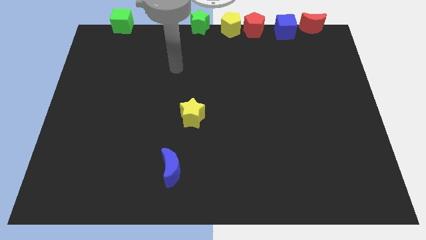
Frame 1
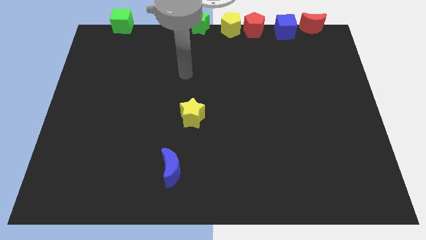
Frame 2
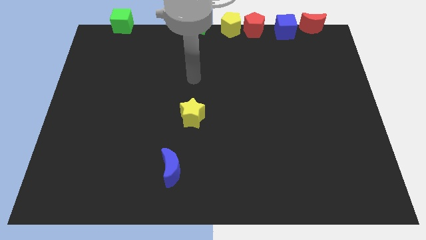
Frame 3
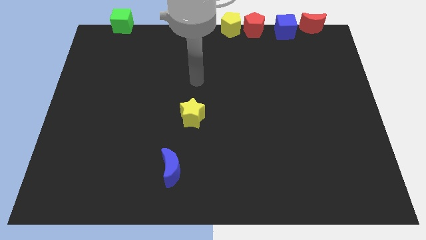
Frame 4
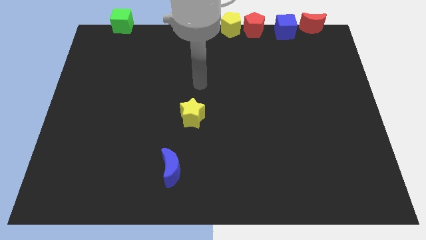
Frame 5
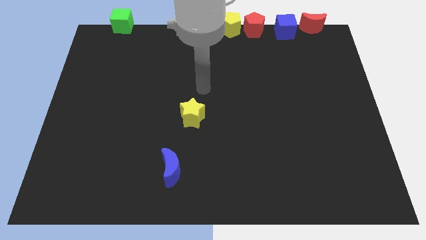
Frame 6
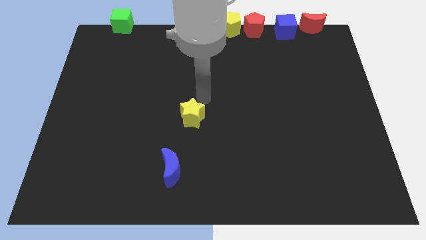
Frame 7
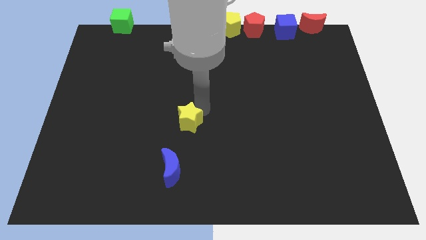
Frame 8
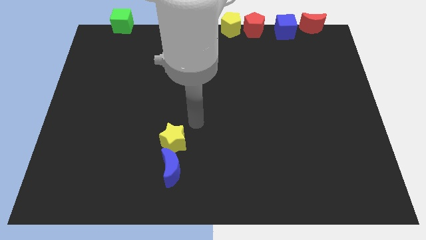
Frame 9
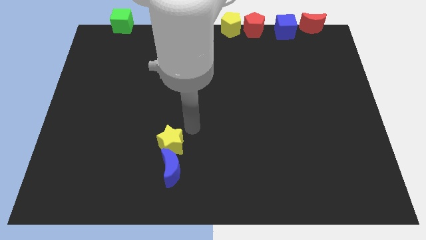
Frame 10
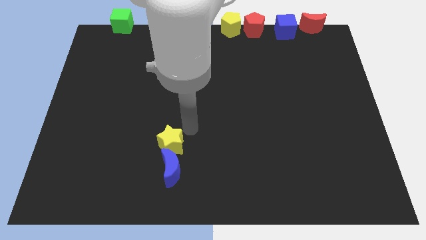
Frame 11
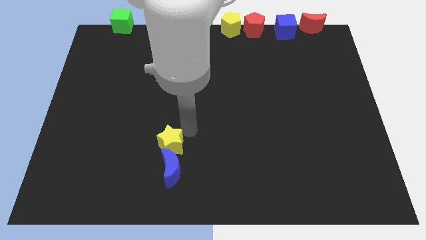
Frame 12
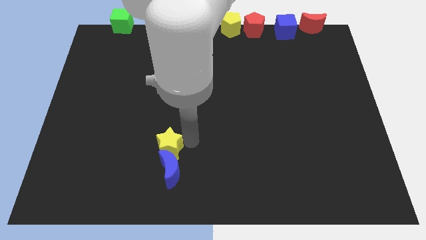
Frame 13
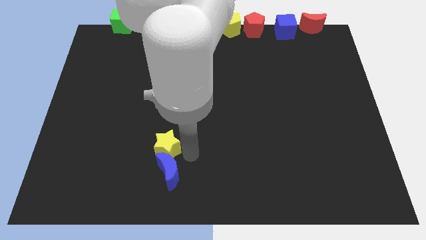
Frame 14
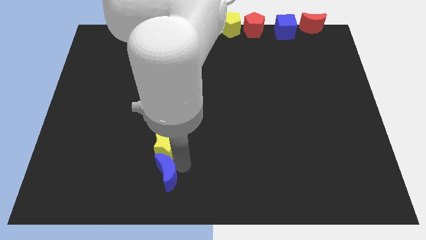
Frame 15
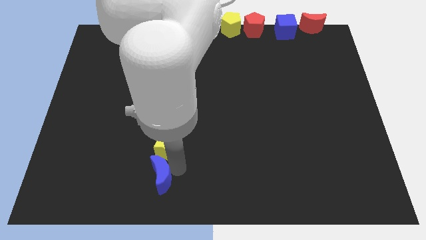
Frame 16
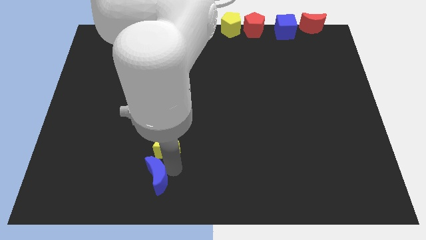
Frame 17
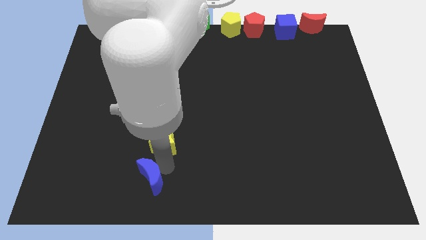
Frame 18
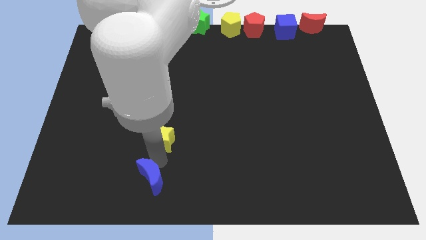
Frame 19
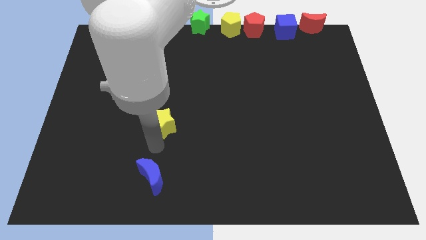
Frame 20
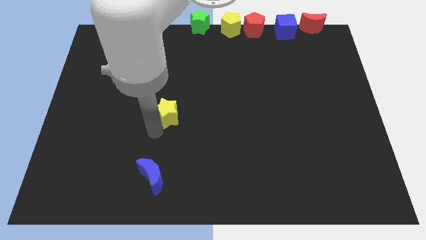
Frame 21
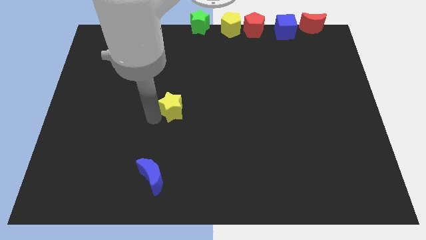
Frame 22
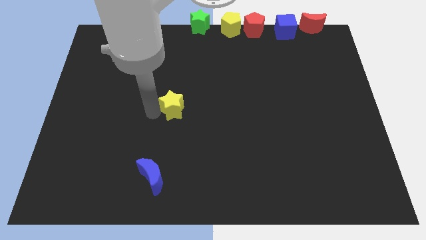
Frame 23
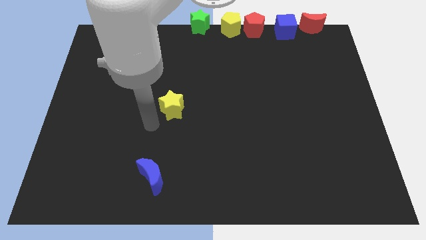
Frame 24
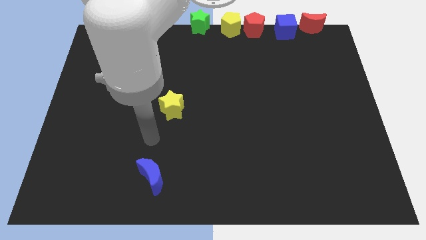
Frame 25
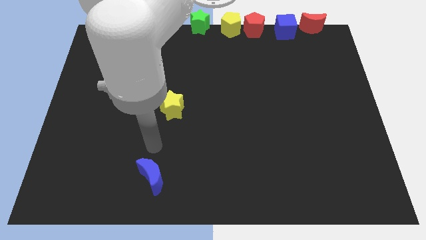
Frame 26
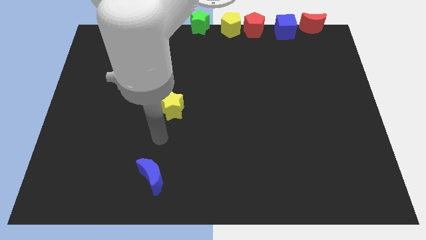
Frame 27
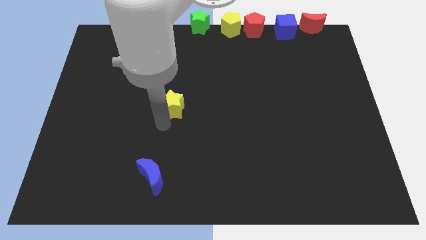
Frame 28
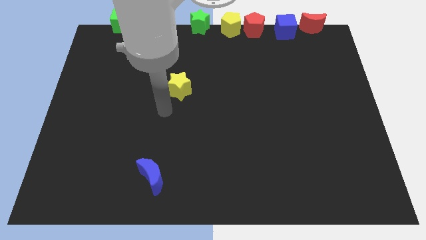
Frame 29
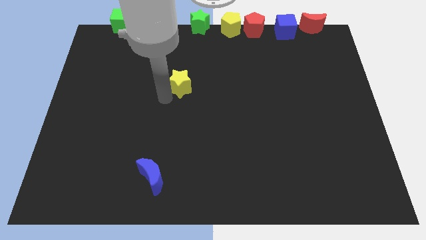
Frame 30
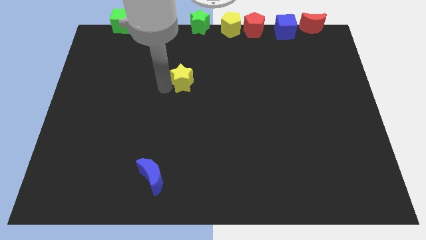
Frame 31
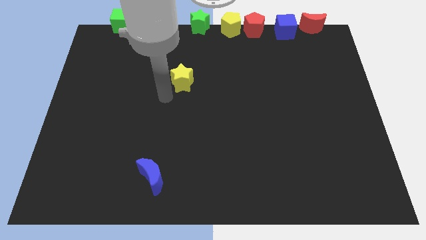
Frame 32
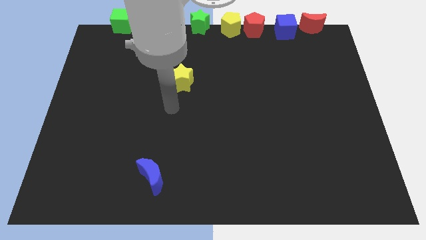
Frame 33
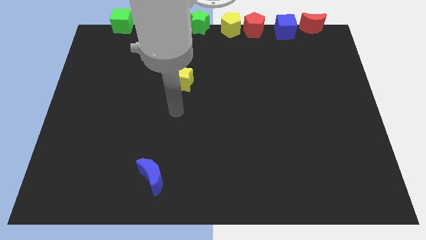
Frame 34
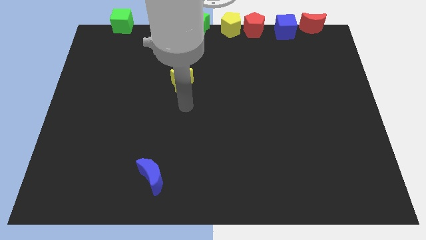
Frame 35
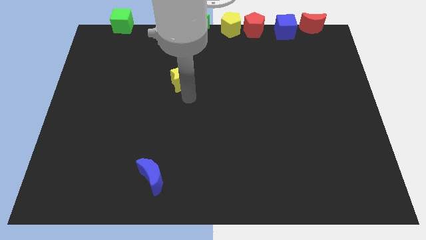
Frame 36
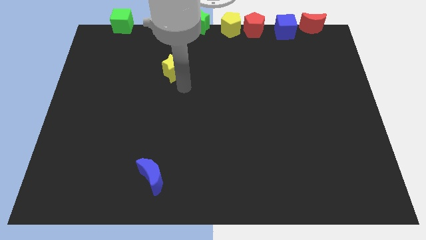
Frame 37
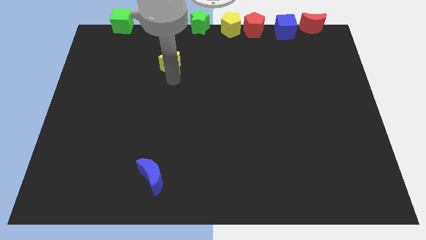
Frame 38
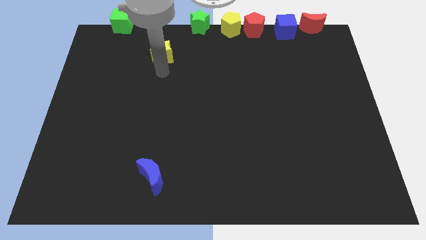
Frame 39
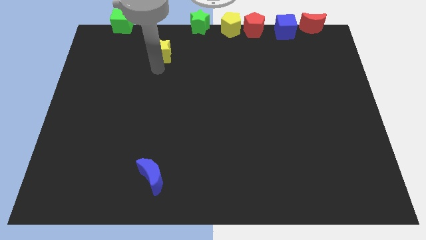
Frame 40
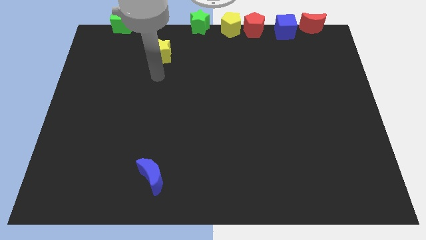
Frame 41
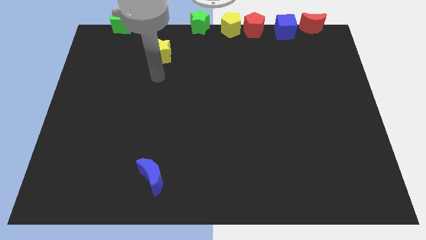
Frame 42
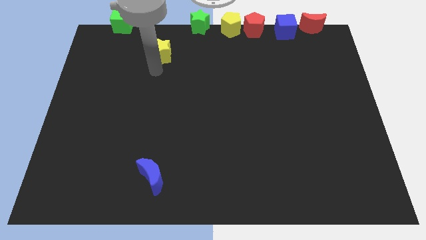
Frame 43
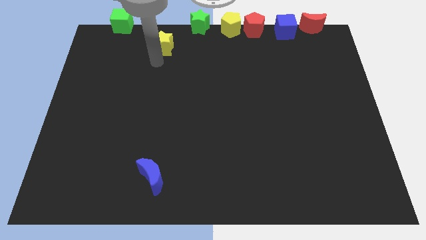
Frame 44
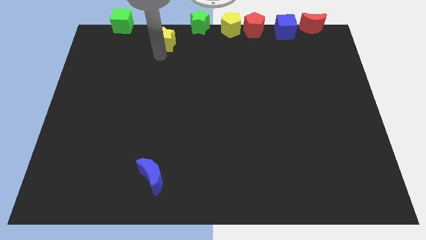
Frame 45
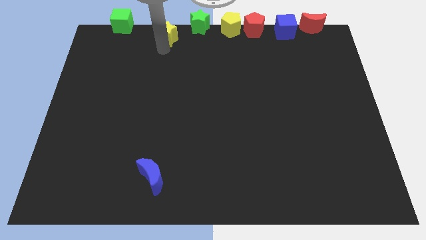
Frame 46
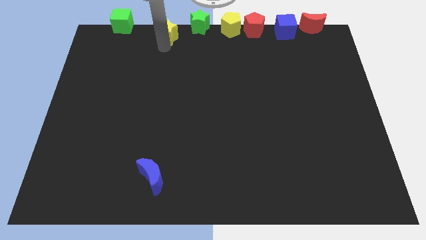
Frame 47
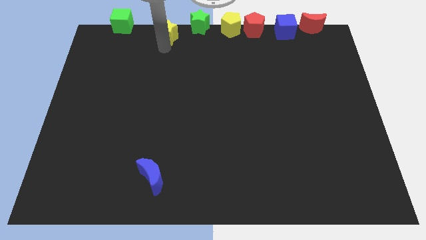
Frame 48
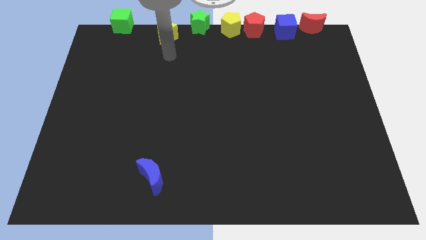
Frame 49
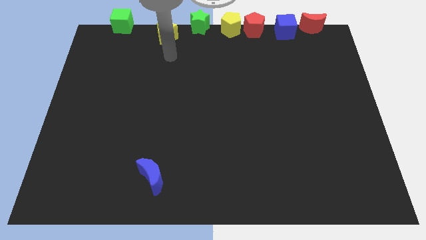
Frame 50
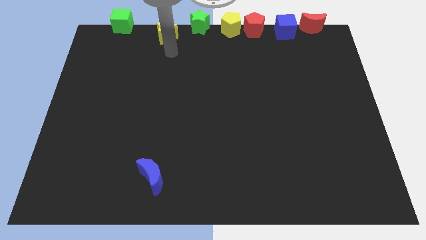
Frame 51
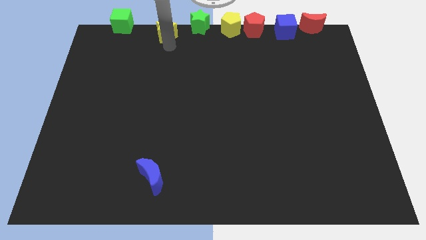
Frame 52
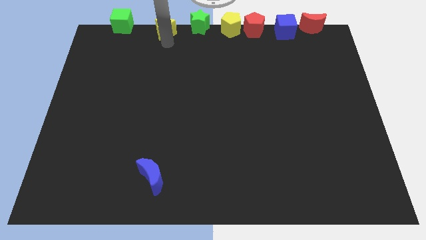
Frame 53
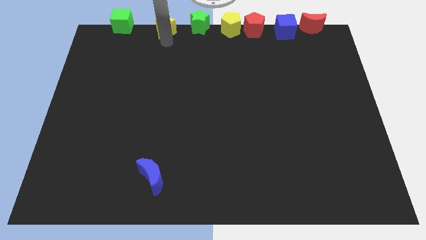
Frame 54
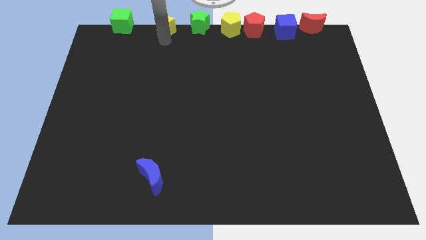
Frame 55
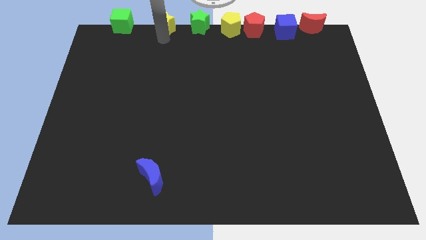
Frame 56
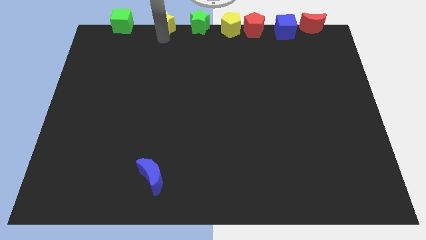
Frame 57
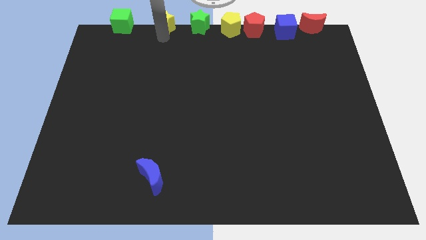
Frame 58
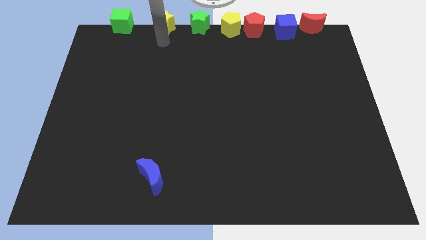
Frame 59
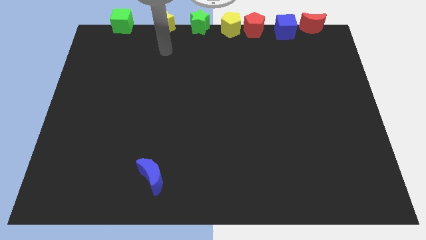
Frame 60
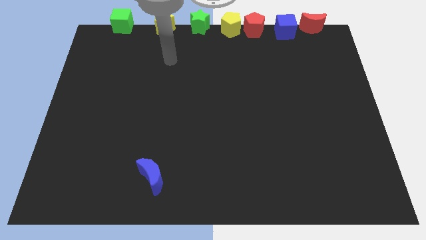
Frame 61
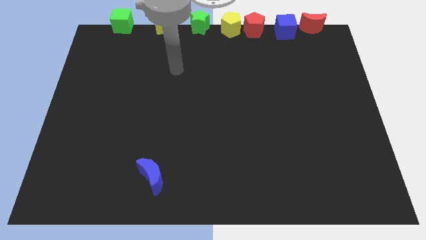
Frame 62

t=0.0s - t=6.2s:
place the yellow star in between the green cube and green star

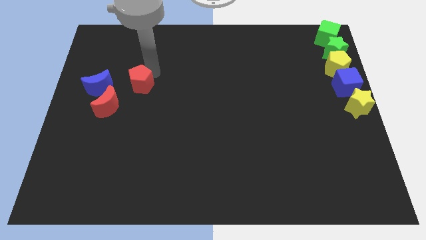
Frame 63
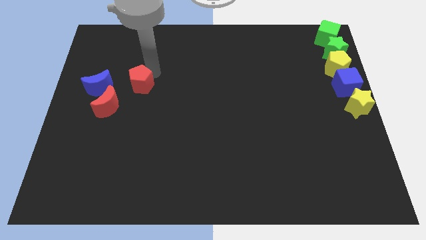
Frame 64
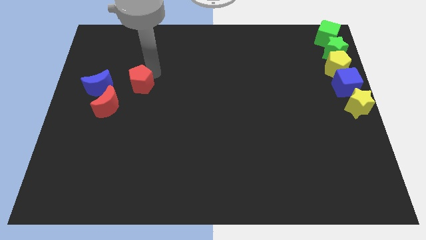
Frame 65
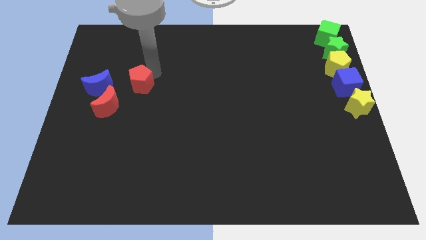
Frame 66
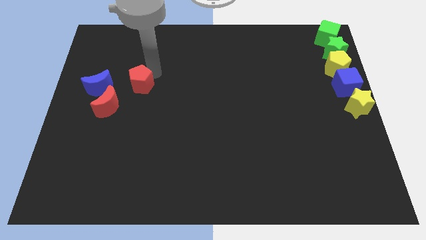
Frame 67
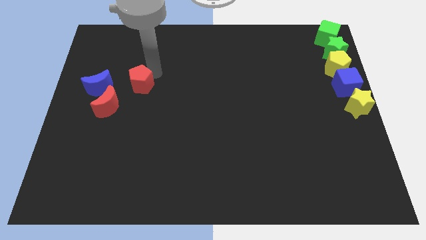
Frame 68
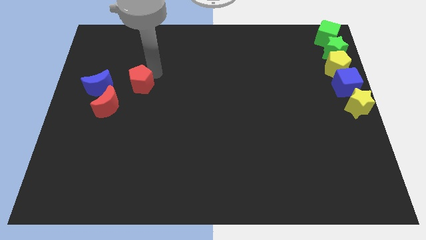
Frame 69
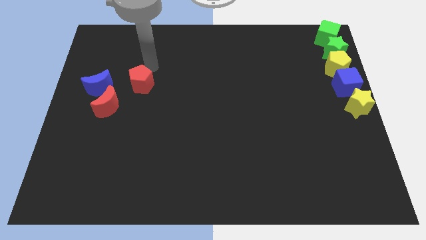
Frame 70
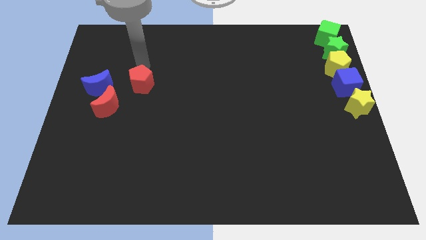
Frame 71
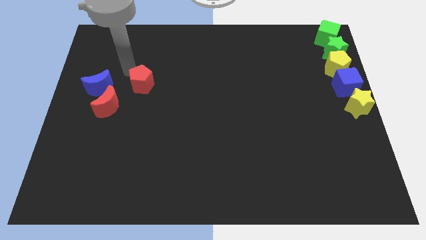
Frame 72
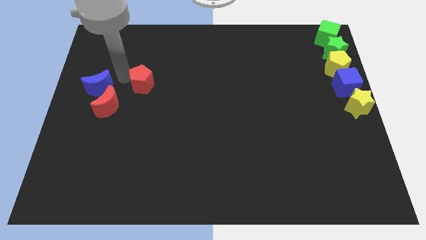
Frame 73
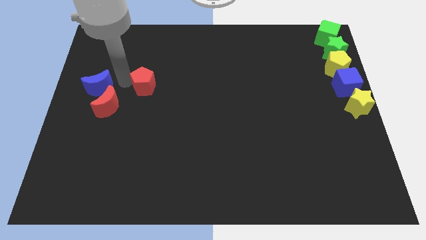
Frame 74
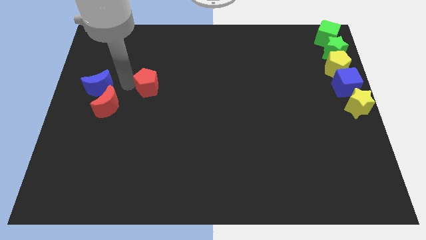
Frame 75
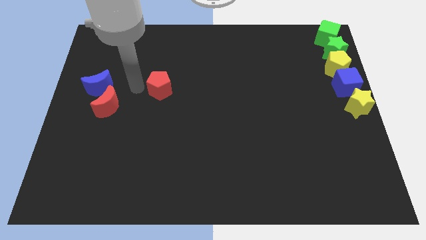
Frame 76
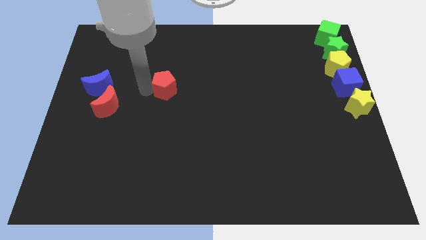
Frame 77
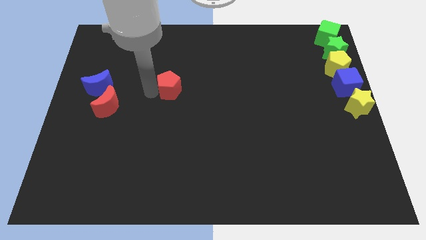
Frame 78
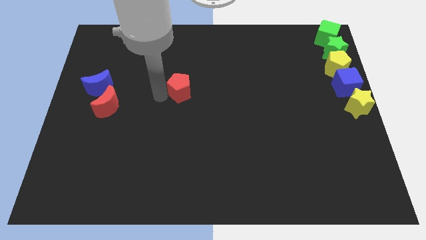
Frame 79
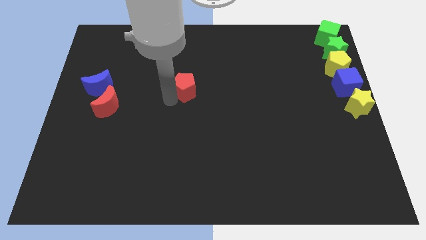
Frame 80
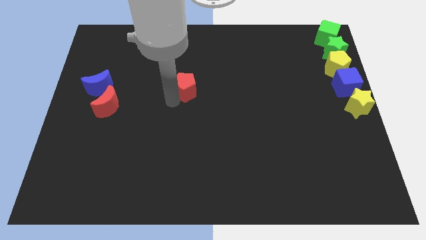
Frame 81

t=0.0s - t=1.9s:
push the red pentagon towards the center of the board

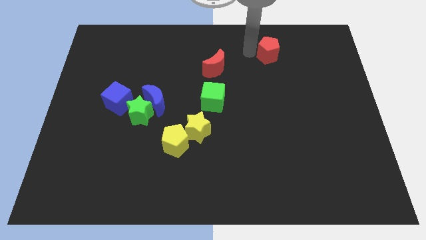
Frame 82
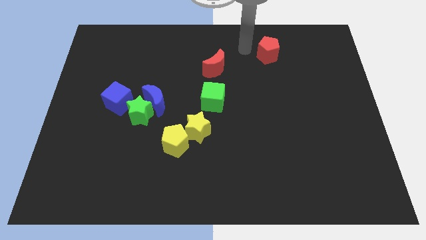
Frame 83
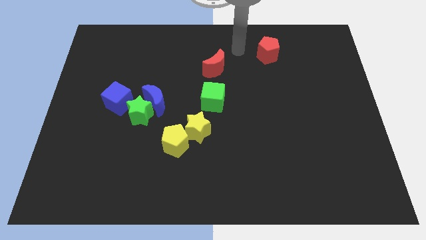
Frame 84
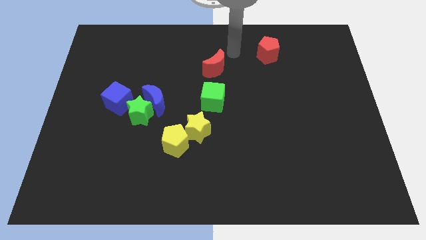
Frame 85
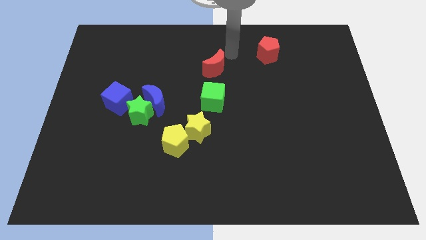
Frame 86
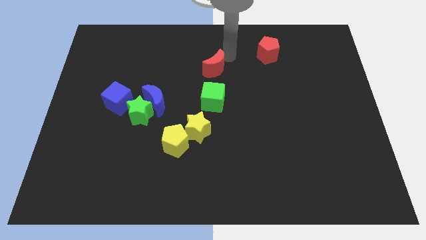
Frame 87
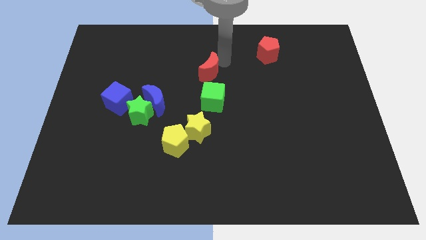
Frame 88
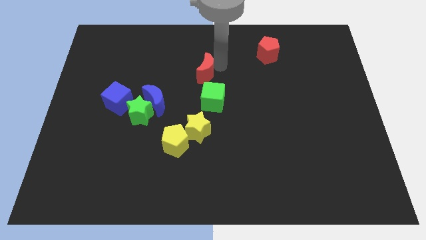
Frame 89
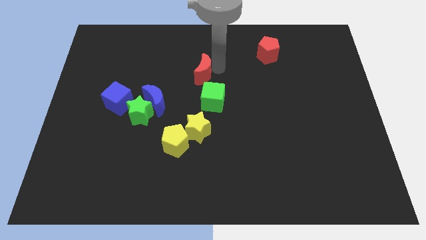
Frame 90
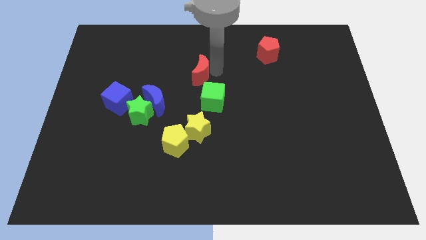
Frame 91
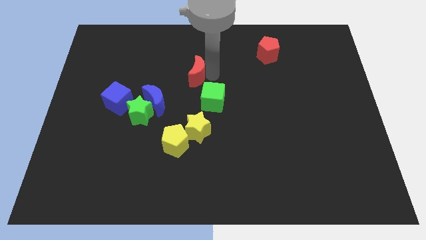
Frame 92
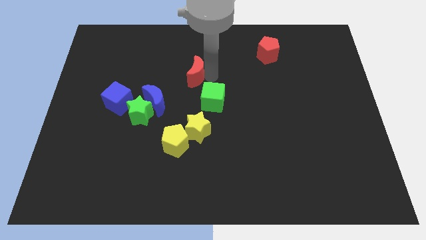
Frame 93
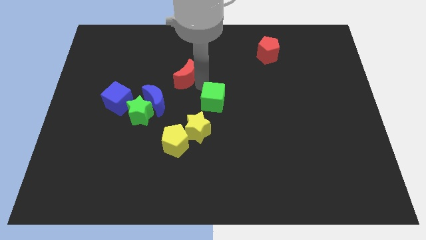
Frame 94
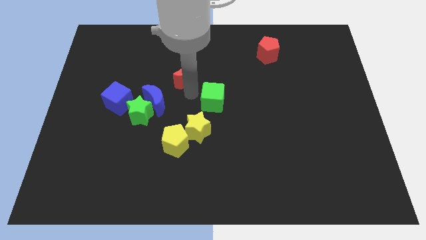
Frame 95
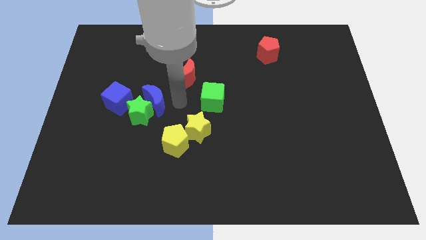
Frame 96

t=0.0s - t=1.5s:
slide the red crescent towards left a bit
